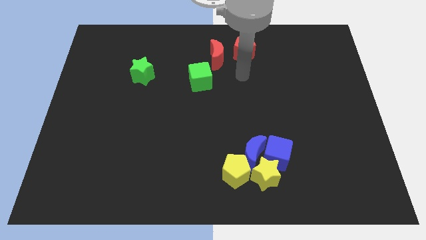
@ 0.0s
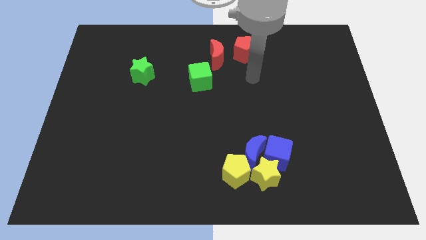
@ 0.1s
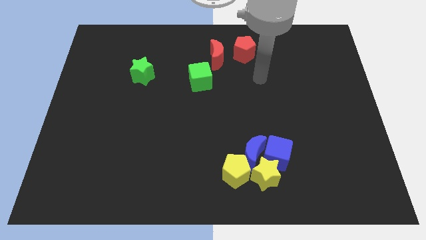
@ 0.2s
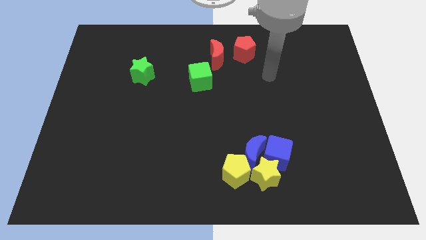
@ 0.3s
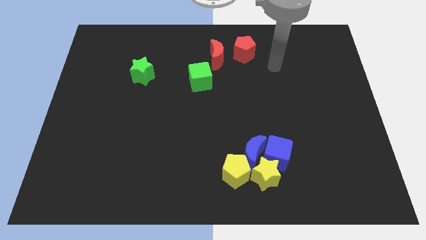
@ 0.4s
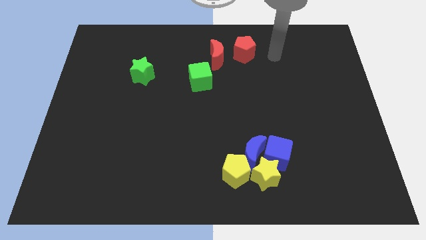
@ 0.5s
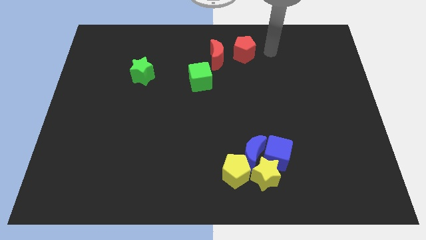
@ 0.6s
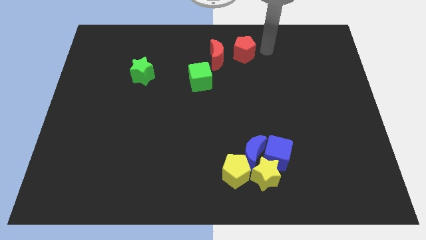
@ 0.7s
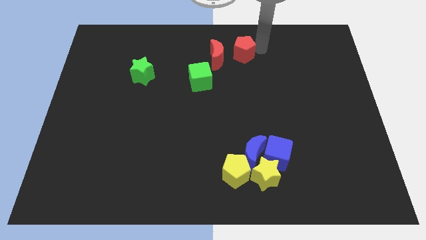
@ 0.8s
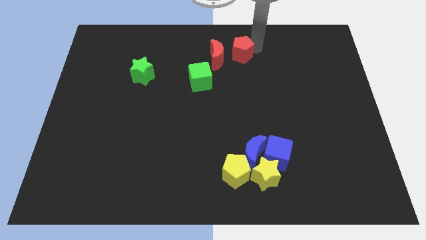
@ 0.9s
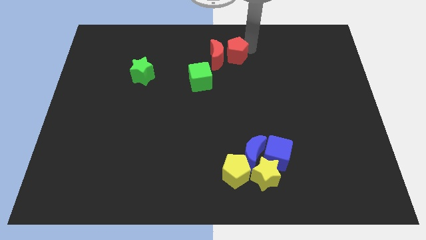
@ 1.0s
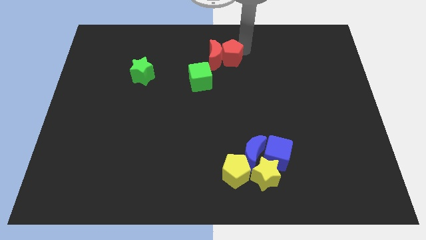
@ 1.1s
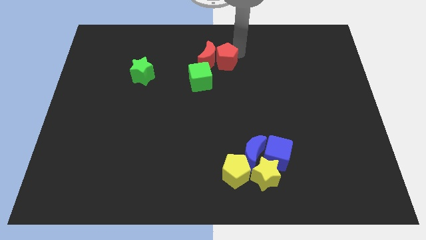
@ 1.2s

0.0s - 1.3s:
move the red pentagon to the right side of the red crescent

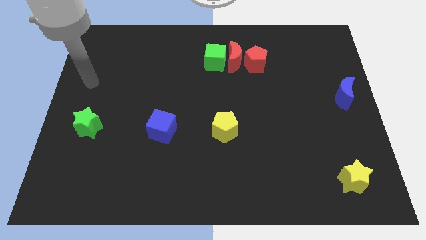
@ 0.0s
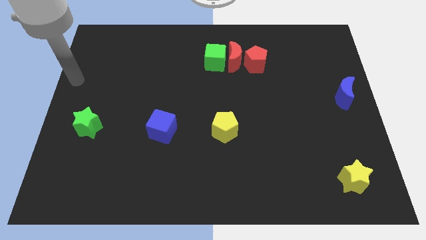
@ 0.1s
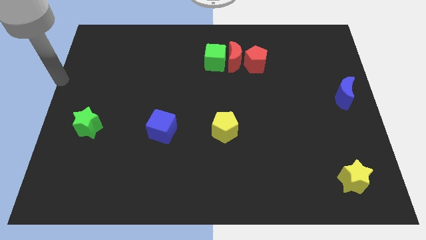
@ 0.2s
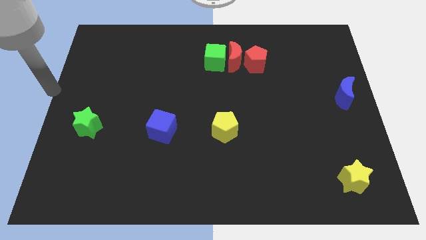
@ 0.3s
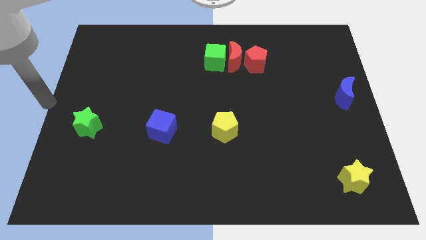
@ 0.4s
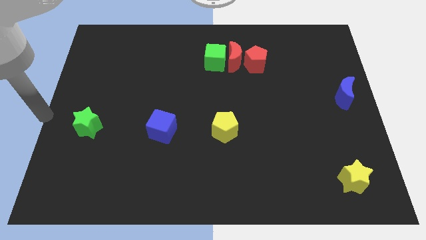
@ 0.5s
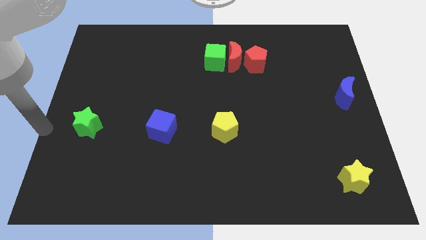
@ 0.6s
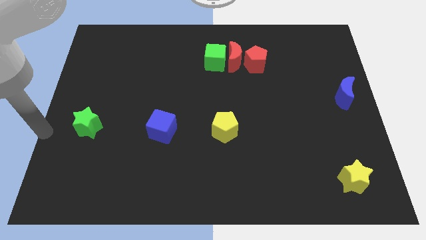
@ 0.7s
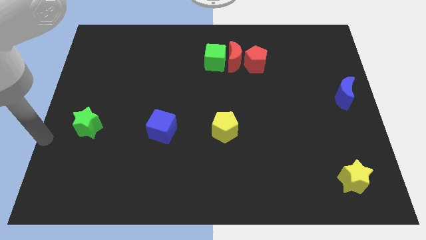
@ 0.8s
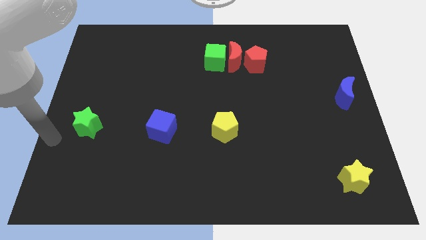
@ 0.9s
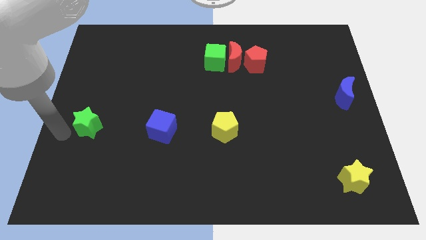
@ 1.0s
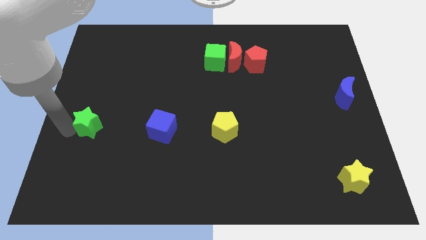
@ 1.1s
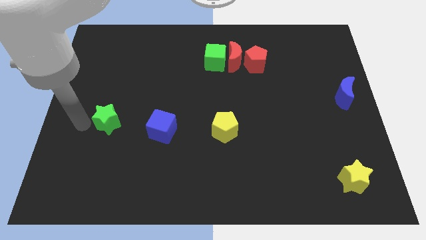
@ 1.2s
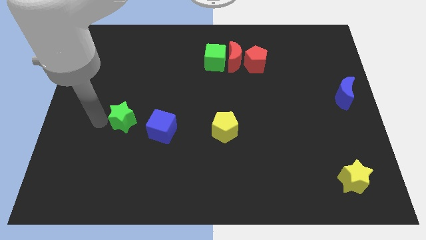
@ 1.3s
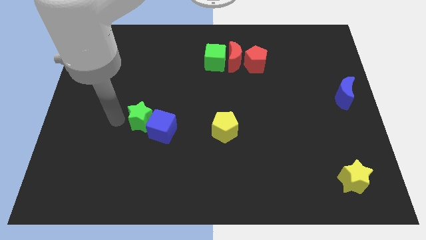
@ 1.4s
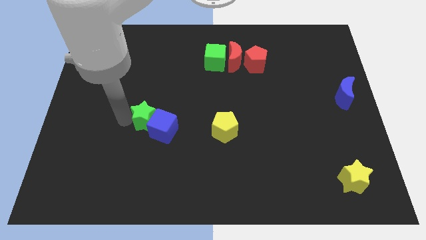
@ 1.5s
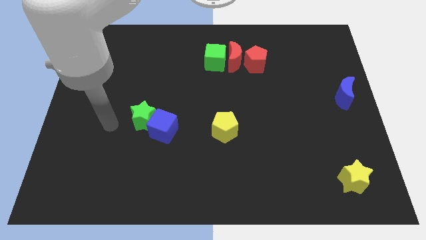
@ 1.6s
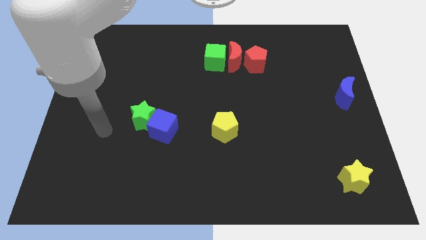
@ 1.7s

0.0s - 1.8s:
put the green star into the blue cube

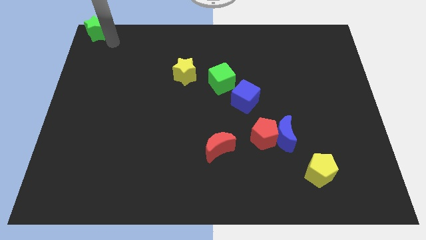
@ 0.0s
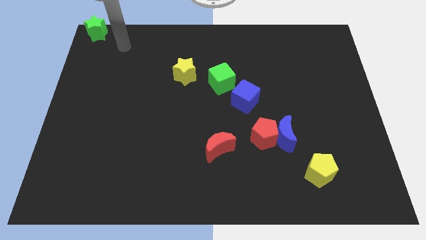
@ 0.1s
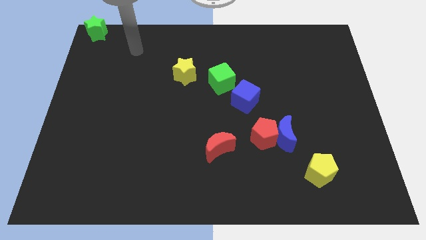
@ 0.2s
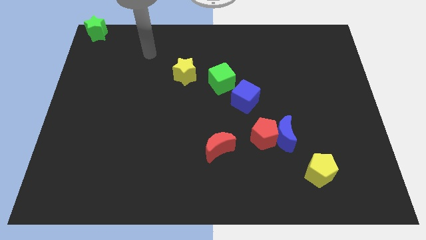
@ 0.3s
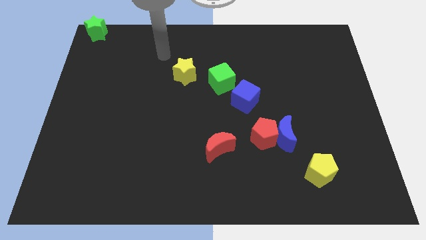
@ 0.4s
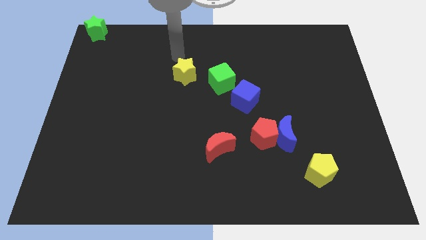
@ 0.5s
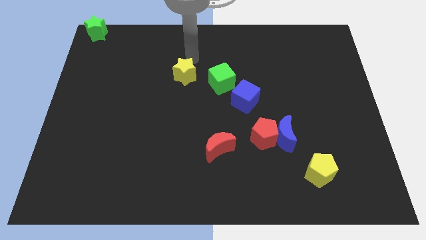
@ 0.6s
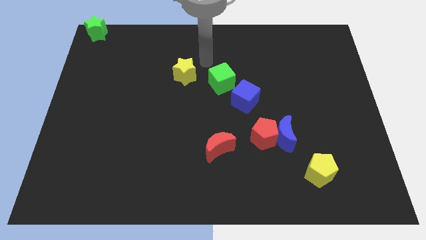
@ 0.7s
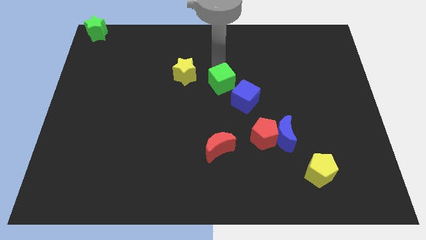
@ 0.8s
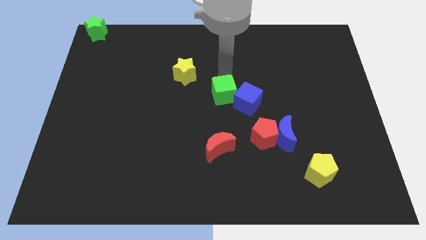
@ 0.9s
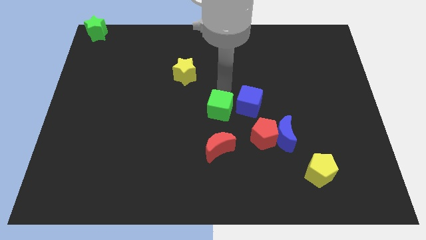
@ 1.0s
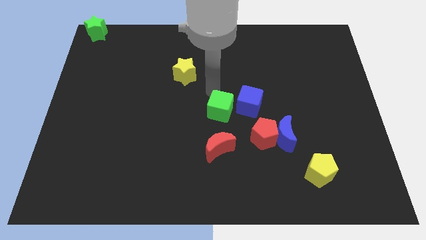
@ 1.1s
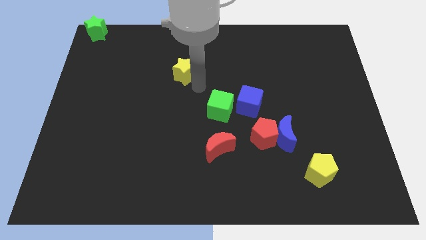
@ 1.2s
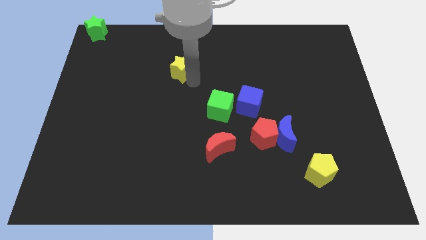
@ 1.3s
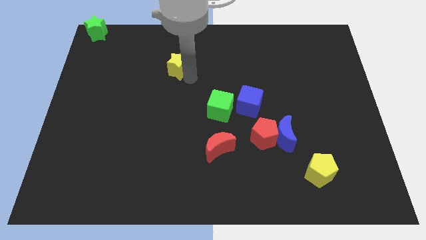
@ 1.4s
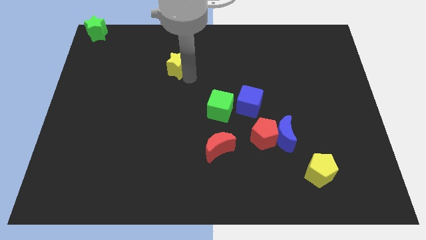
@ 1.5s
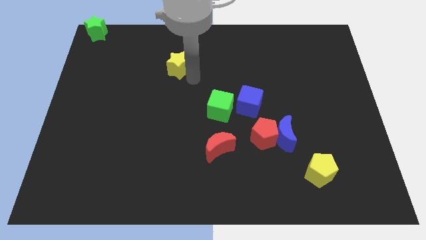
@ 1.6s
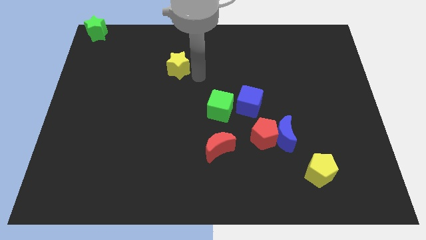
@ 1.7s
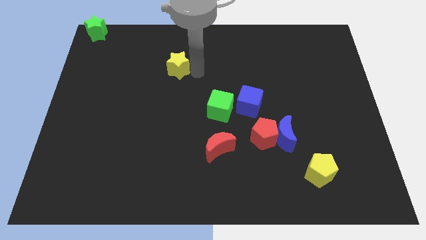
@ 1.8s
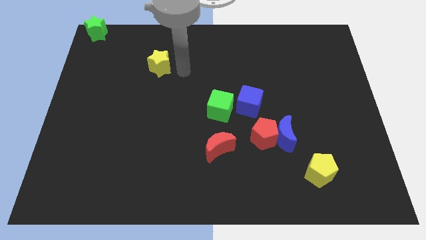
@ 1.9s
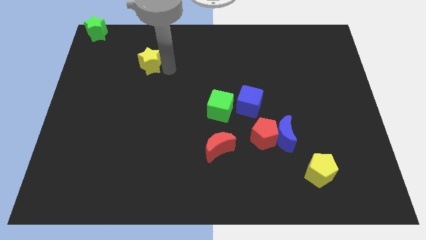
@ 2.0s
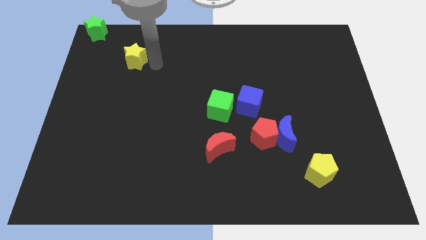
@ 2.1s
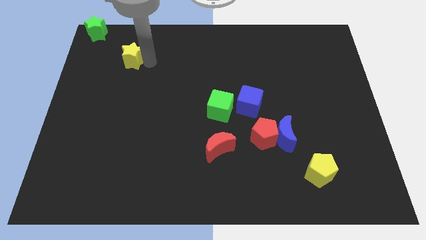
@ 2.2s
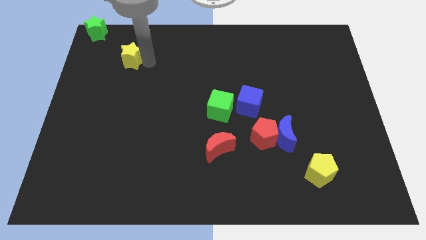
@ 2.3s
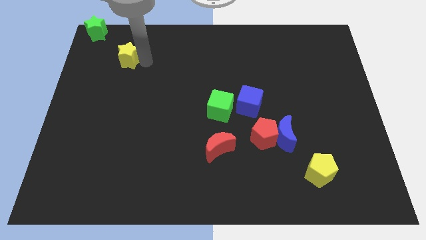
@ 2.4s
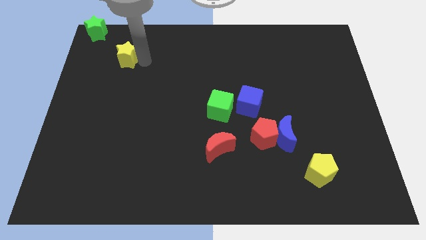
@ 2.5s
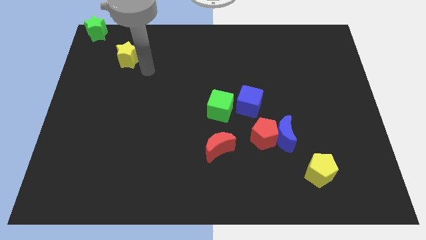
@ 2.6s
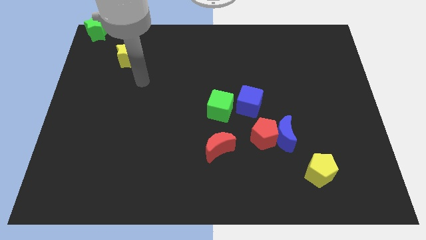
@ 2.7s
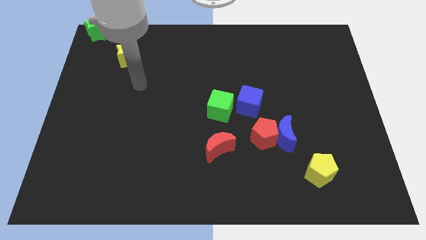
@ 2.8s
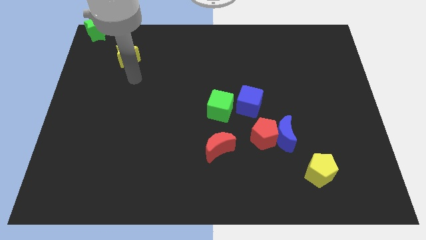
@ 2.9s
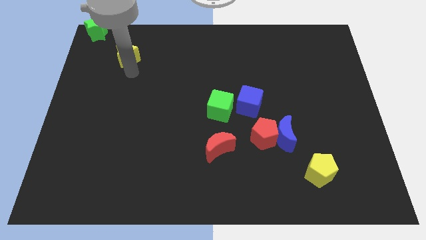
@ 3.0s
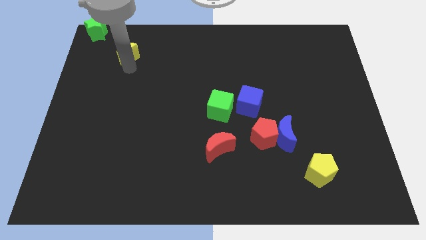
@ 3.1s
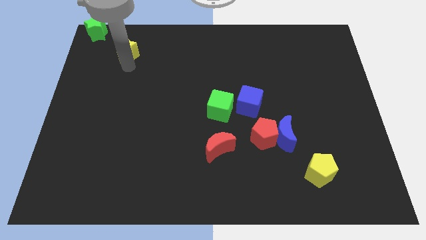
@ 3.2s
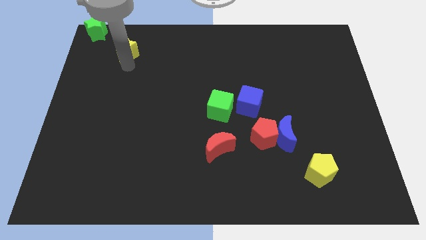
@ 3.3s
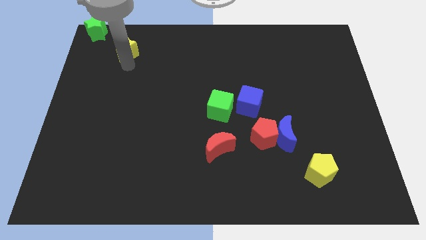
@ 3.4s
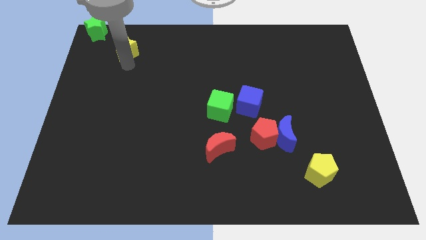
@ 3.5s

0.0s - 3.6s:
drag the yellow star diagonal to the bottom right of the green star

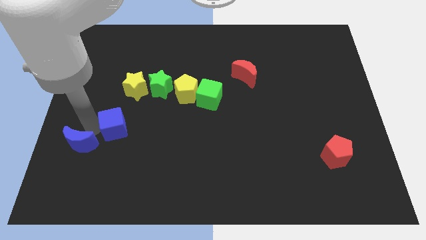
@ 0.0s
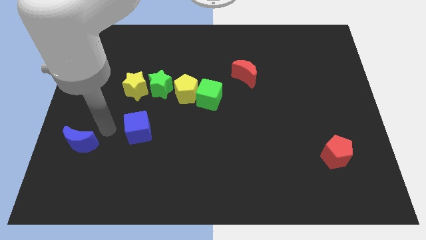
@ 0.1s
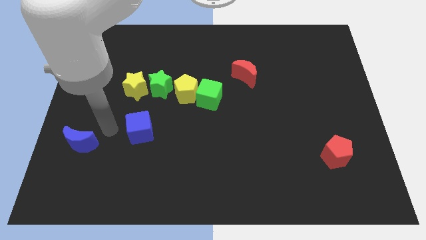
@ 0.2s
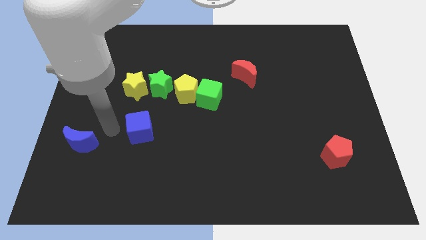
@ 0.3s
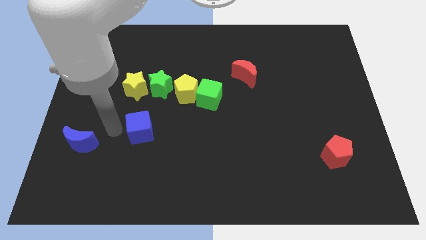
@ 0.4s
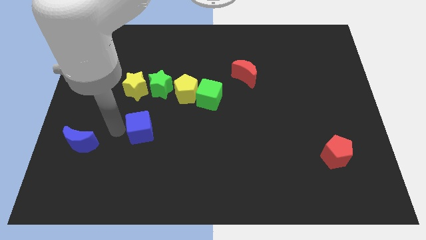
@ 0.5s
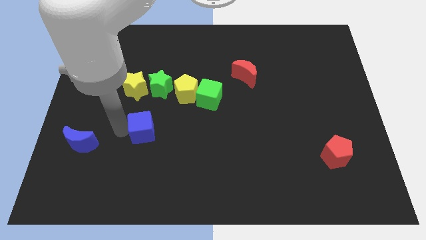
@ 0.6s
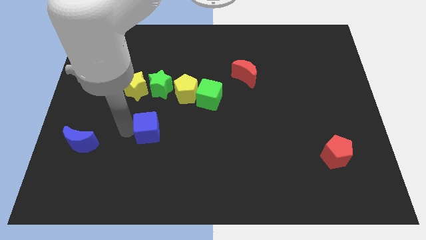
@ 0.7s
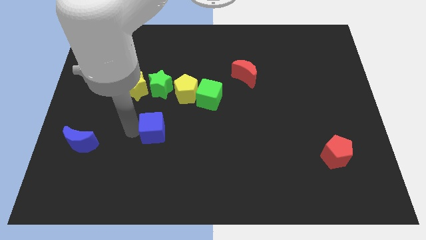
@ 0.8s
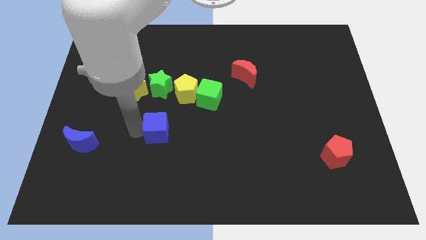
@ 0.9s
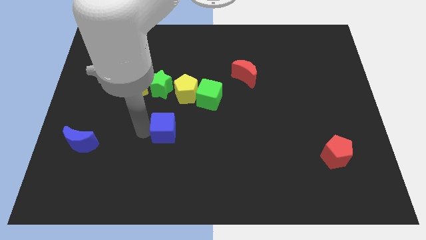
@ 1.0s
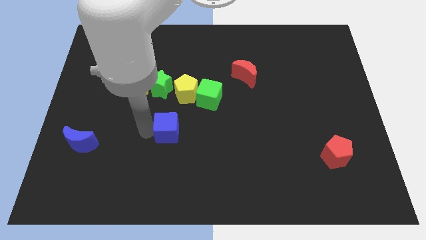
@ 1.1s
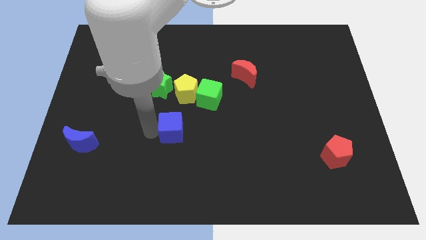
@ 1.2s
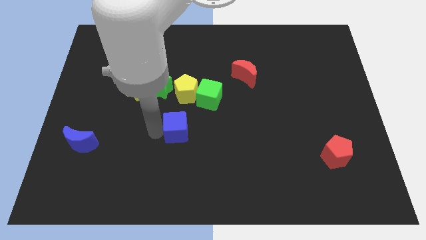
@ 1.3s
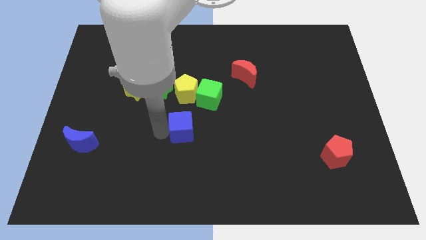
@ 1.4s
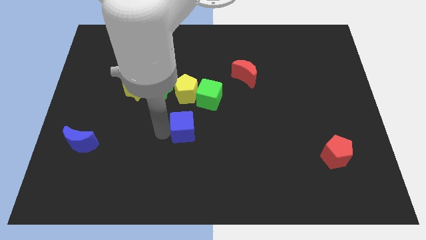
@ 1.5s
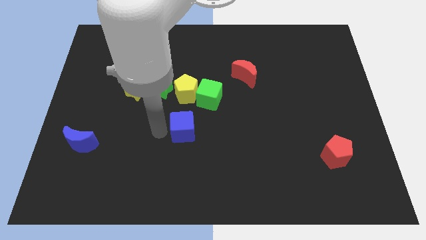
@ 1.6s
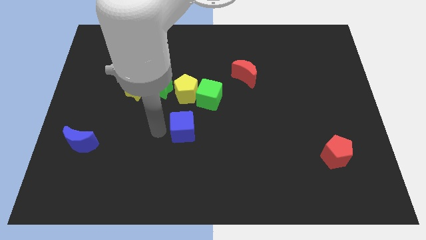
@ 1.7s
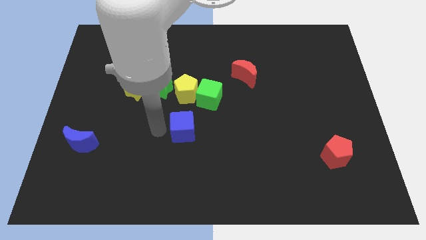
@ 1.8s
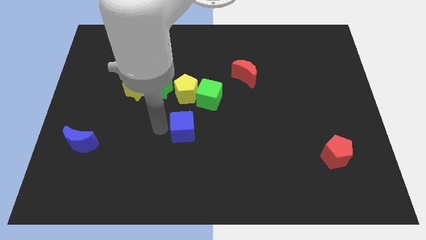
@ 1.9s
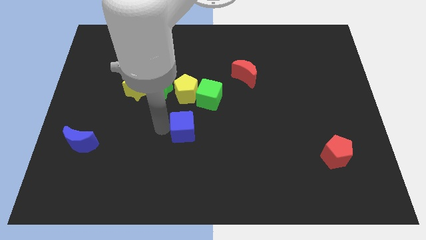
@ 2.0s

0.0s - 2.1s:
move the blue cube away from the blue crescent

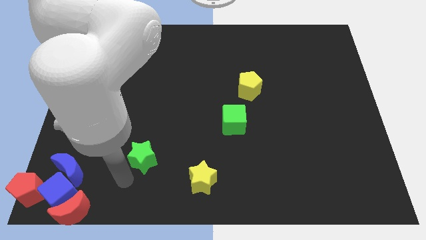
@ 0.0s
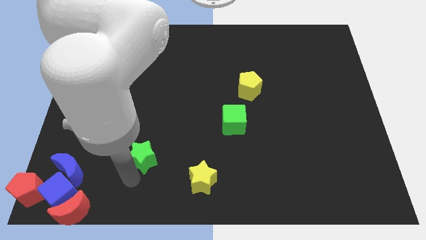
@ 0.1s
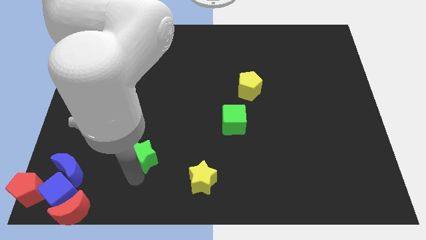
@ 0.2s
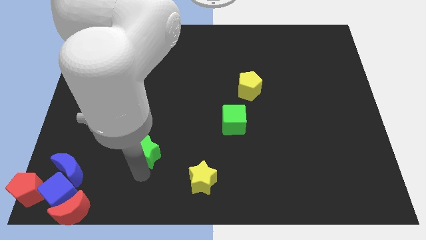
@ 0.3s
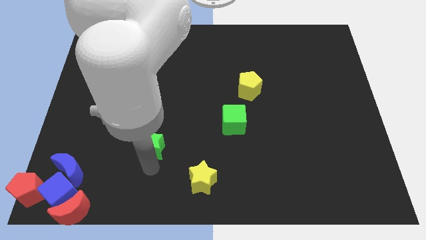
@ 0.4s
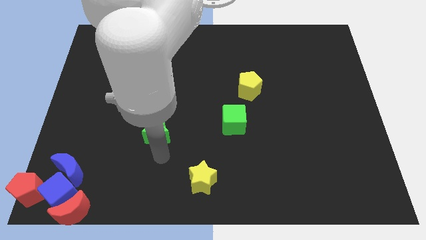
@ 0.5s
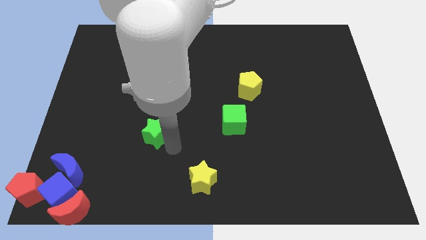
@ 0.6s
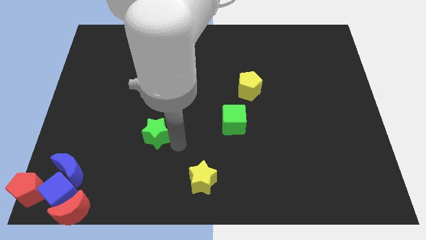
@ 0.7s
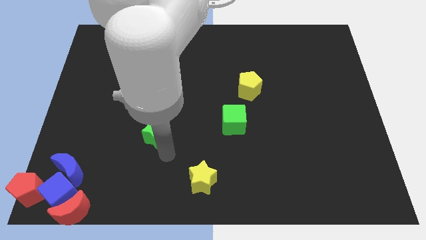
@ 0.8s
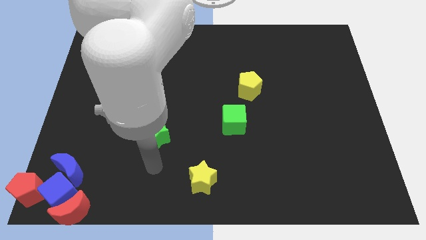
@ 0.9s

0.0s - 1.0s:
push the green star to the top of the board
